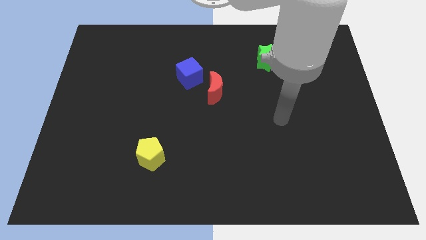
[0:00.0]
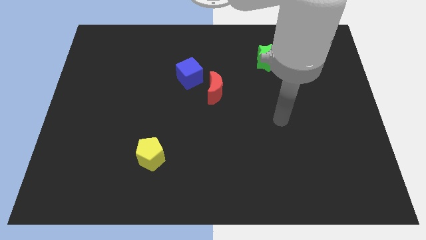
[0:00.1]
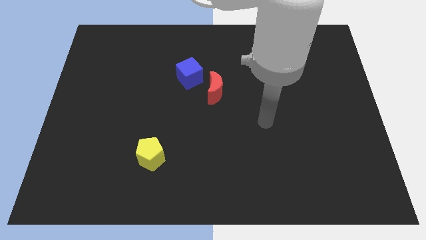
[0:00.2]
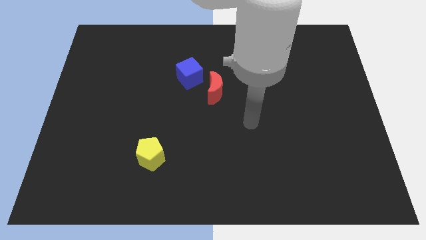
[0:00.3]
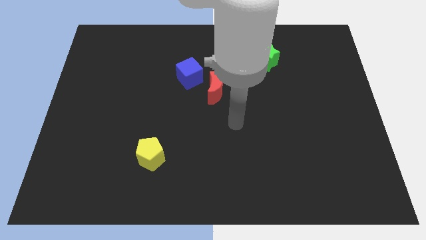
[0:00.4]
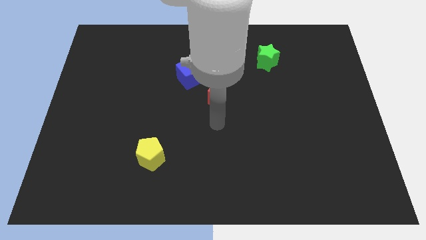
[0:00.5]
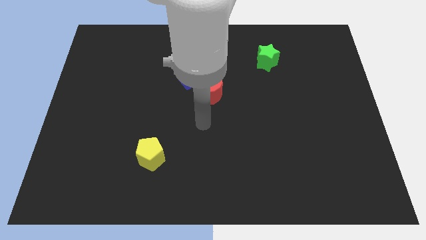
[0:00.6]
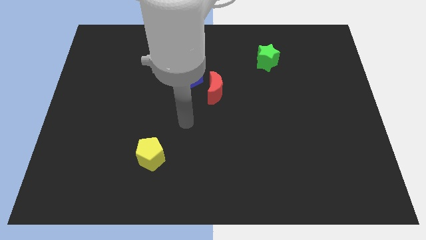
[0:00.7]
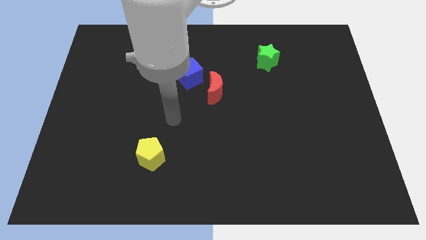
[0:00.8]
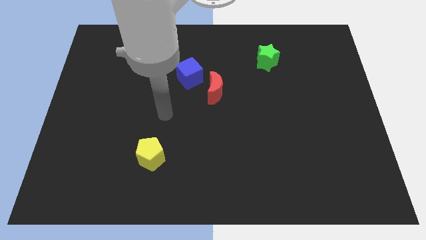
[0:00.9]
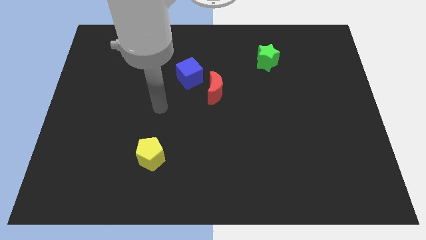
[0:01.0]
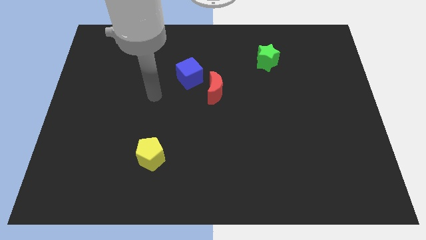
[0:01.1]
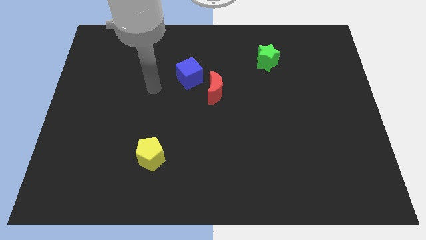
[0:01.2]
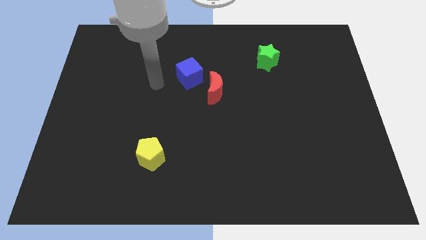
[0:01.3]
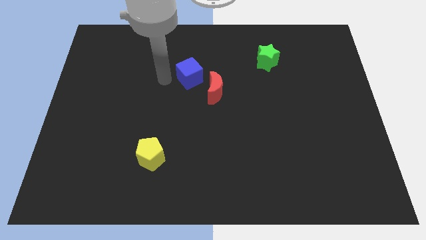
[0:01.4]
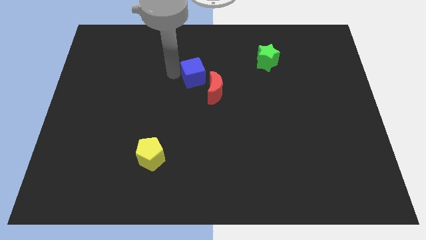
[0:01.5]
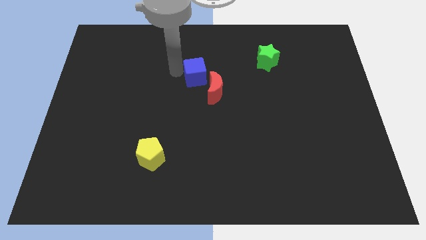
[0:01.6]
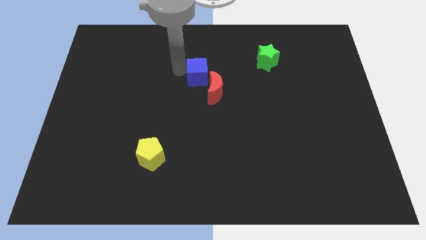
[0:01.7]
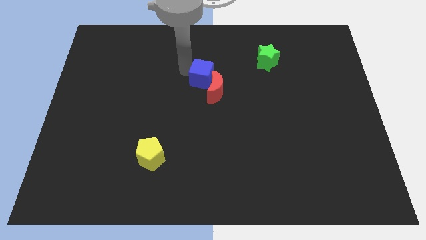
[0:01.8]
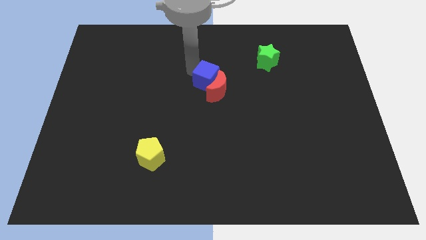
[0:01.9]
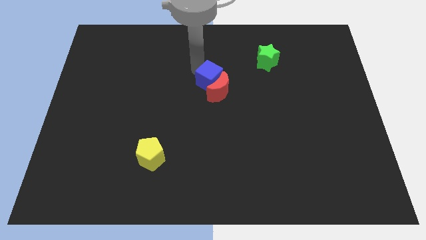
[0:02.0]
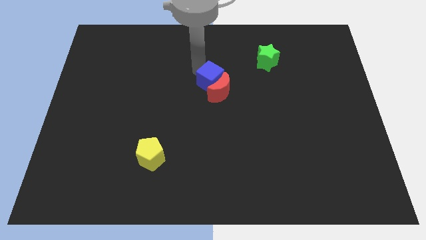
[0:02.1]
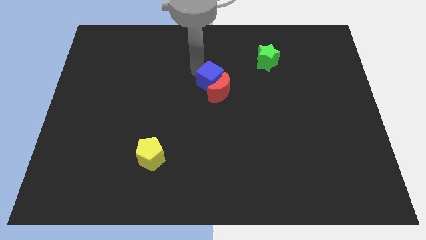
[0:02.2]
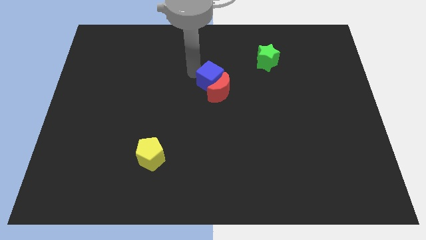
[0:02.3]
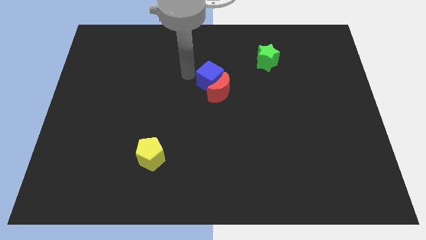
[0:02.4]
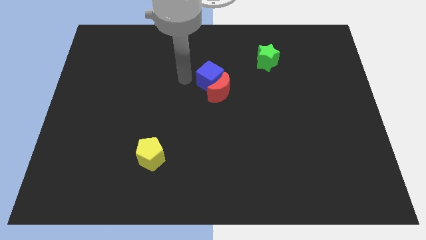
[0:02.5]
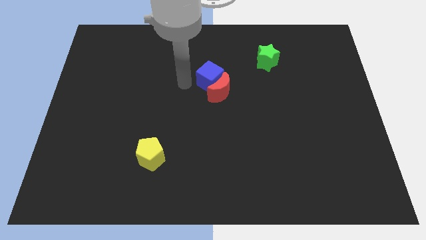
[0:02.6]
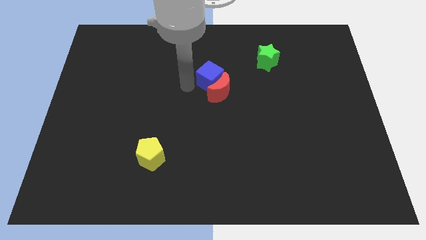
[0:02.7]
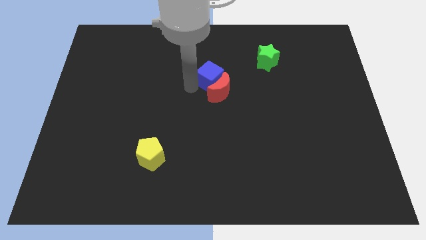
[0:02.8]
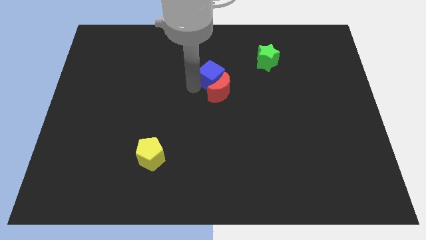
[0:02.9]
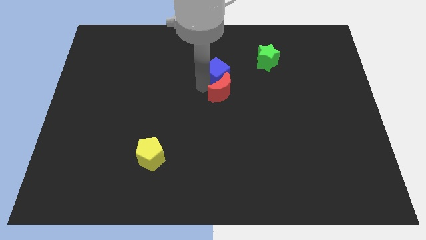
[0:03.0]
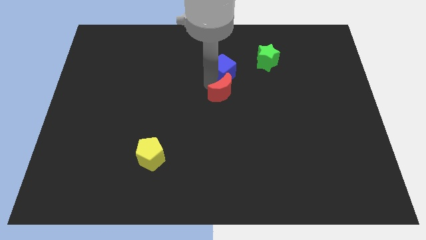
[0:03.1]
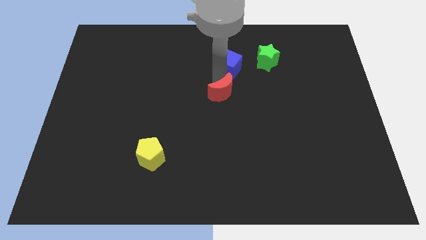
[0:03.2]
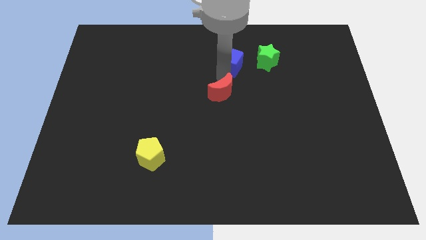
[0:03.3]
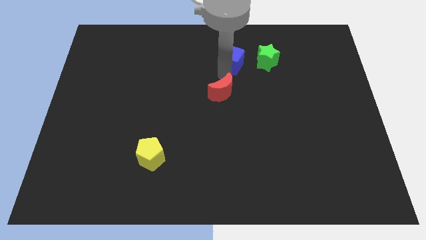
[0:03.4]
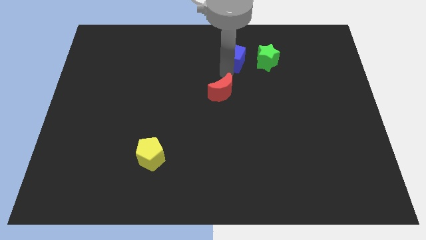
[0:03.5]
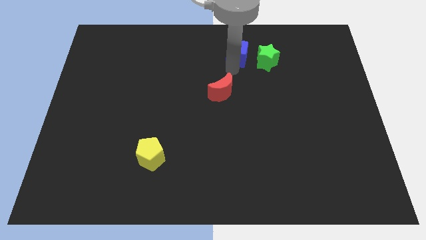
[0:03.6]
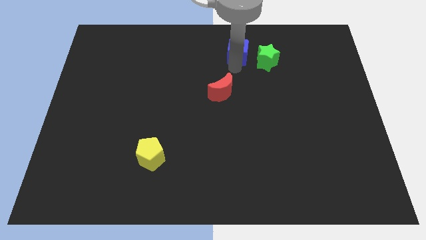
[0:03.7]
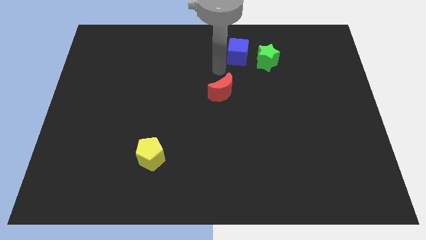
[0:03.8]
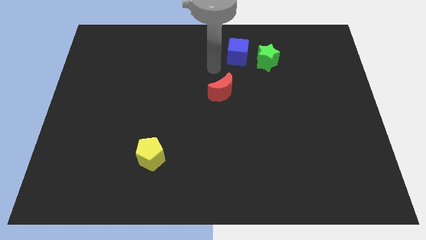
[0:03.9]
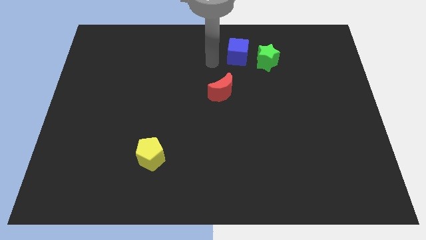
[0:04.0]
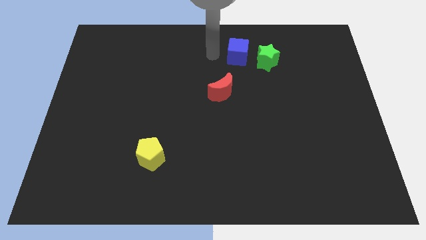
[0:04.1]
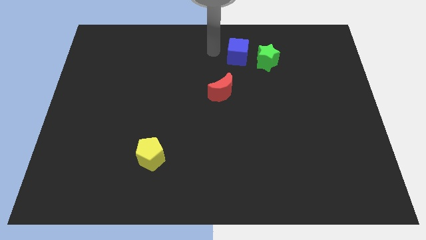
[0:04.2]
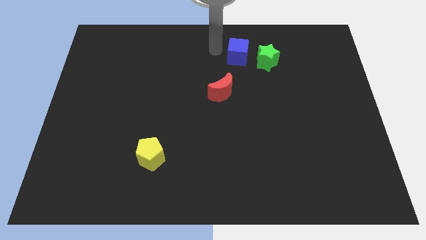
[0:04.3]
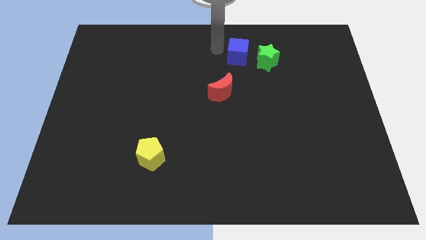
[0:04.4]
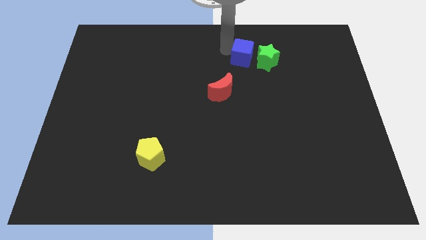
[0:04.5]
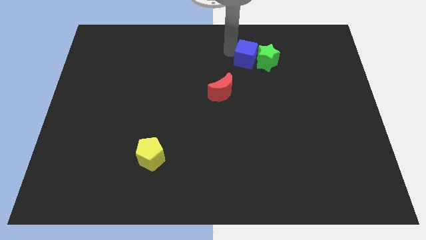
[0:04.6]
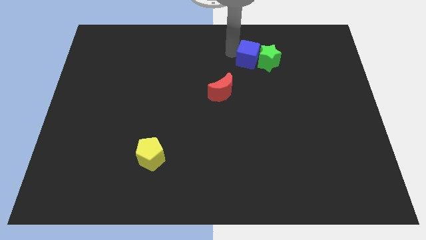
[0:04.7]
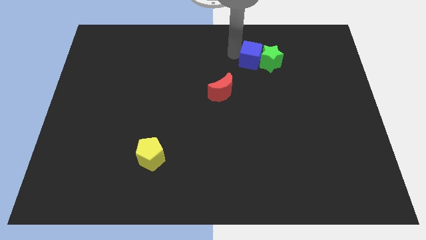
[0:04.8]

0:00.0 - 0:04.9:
put the blue block to the green star

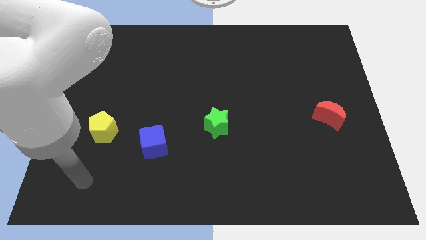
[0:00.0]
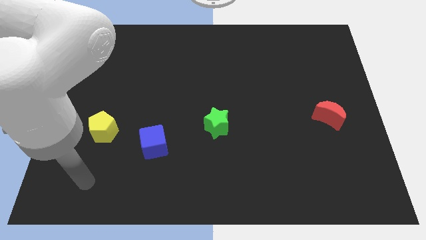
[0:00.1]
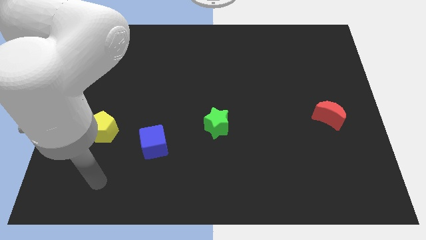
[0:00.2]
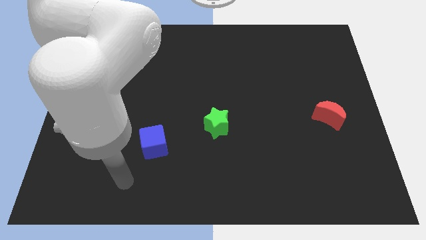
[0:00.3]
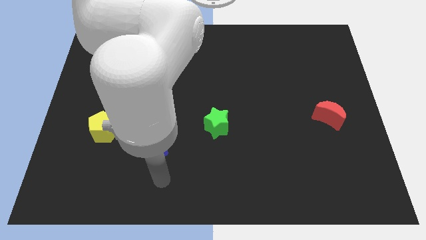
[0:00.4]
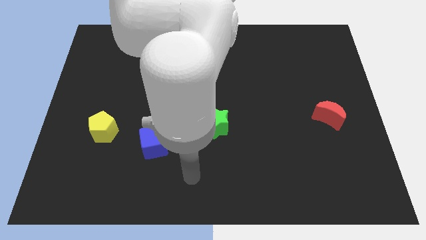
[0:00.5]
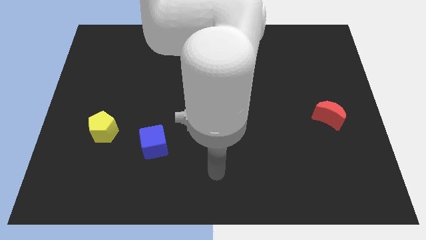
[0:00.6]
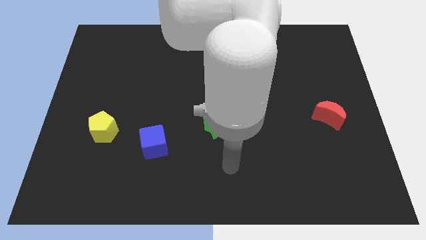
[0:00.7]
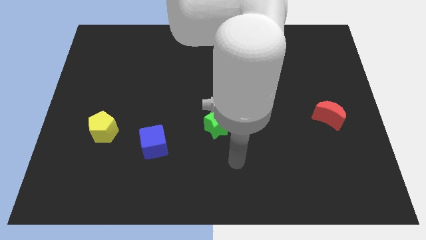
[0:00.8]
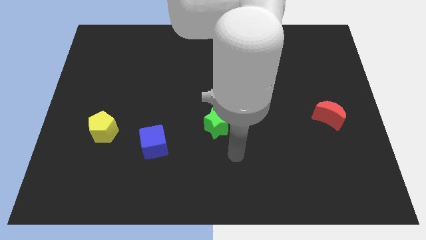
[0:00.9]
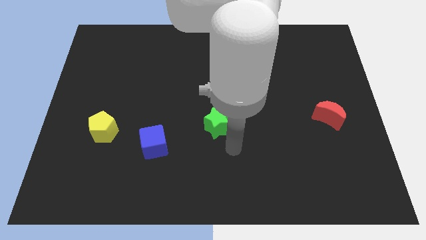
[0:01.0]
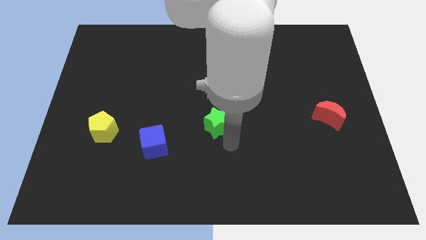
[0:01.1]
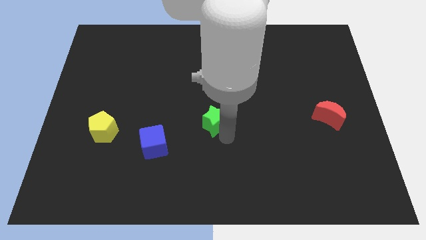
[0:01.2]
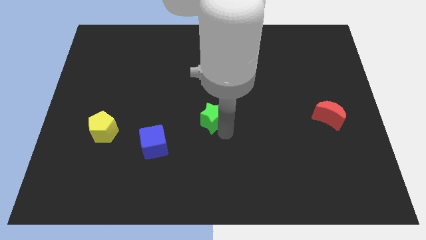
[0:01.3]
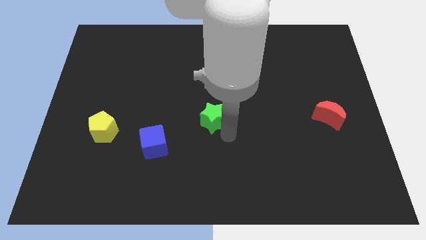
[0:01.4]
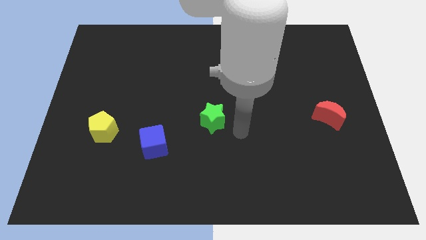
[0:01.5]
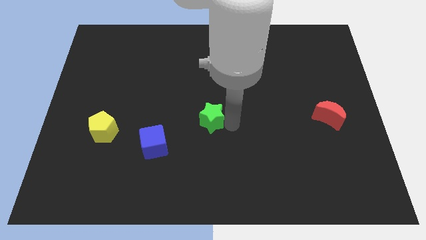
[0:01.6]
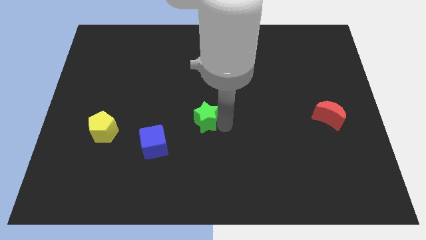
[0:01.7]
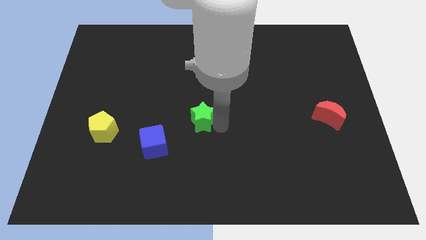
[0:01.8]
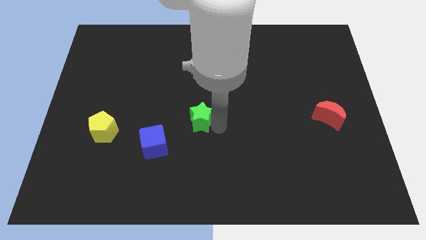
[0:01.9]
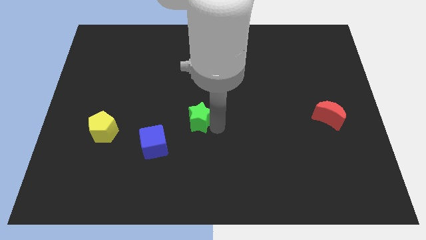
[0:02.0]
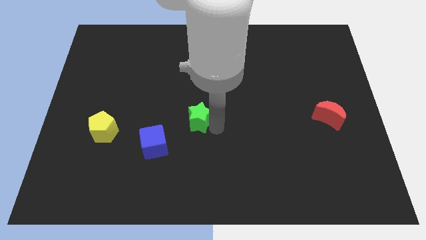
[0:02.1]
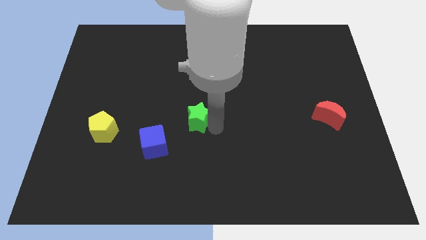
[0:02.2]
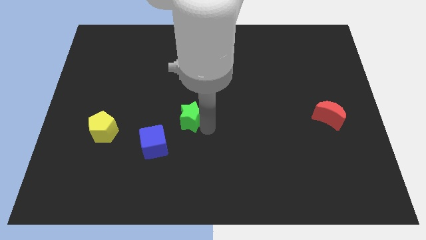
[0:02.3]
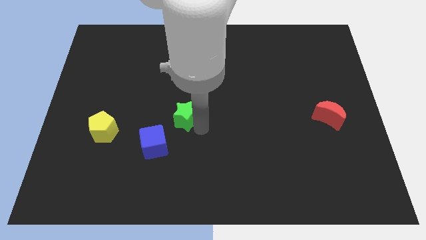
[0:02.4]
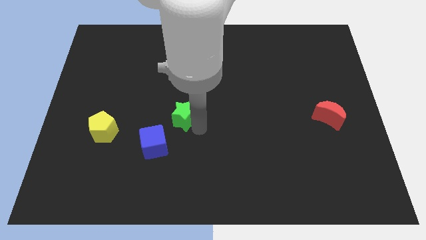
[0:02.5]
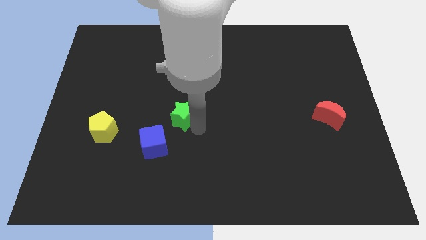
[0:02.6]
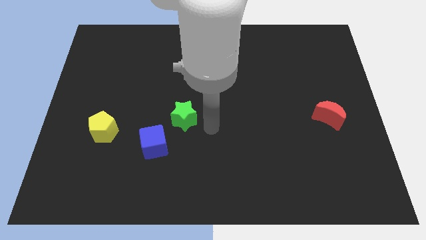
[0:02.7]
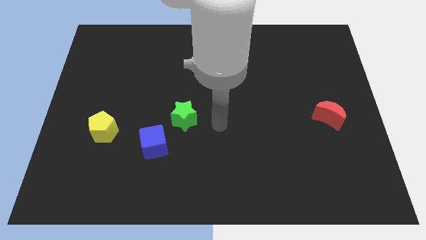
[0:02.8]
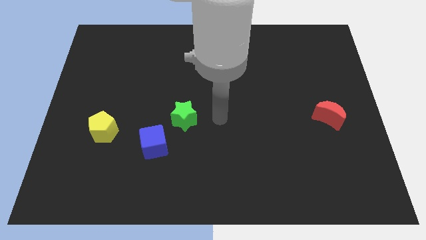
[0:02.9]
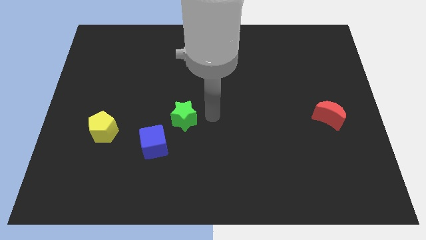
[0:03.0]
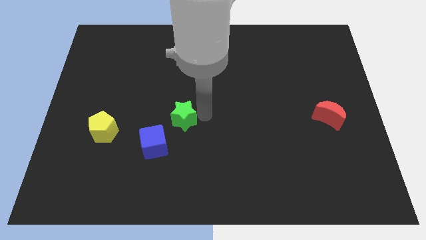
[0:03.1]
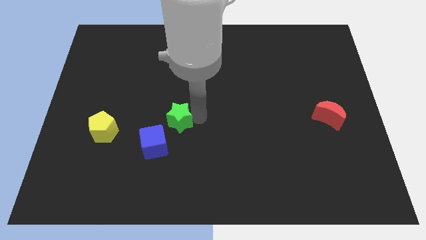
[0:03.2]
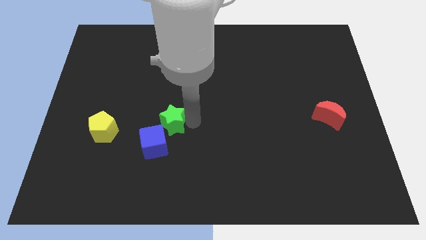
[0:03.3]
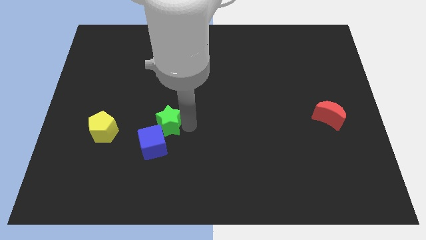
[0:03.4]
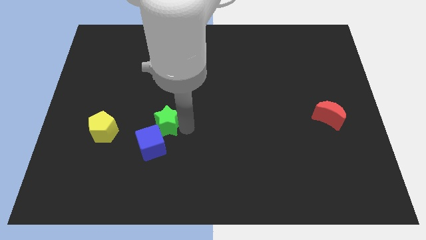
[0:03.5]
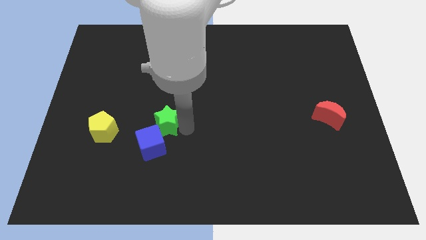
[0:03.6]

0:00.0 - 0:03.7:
slide the green star to the blue cube
